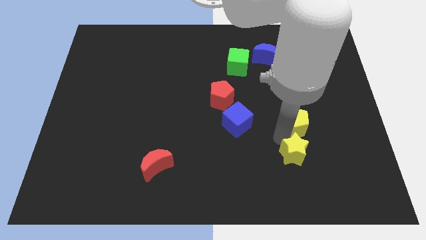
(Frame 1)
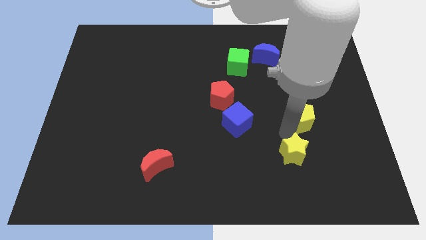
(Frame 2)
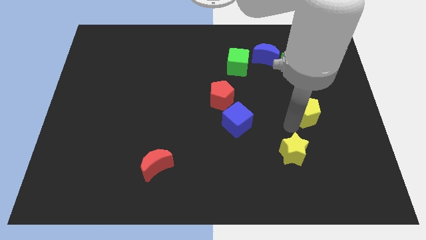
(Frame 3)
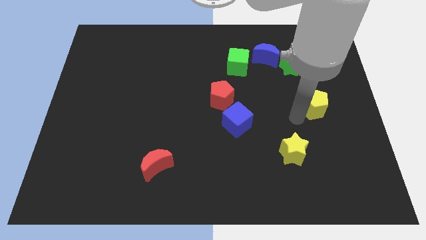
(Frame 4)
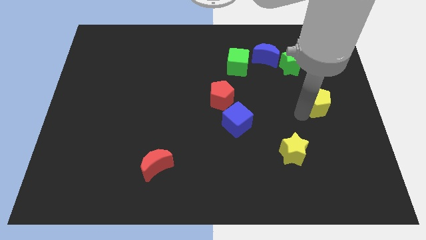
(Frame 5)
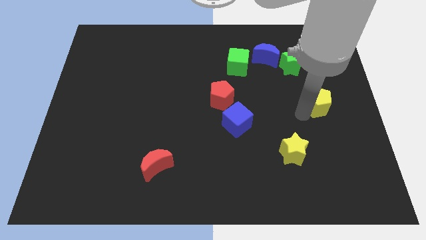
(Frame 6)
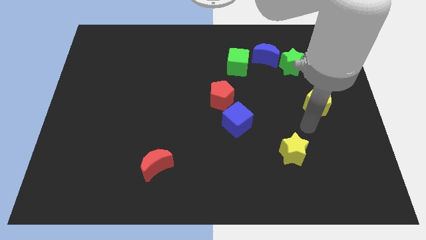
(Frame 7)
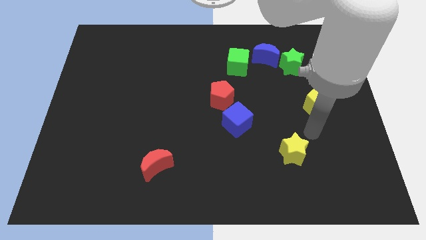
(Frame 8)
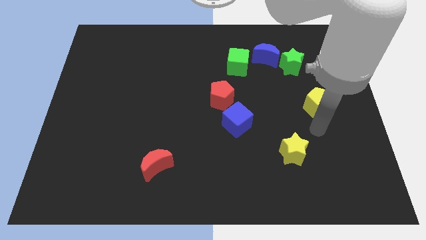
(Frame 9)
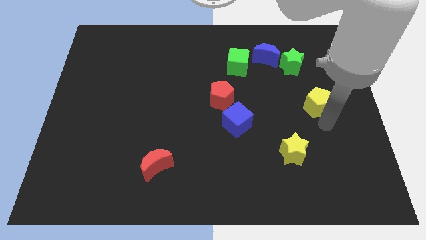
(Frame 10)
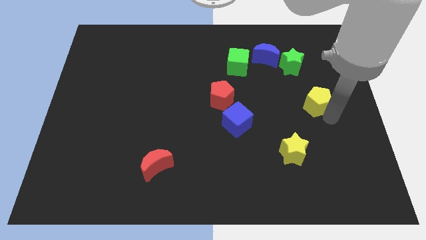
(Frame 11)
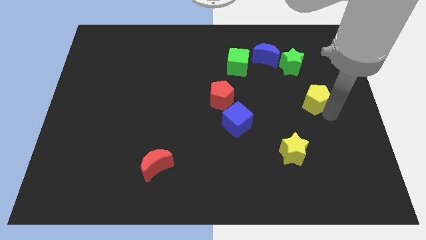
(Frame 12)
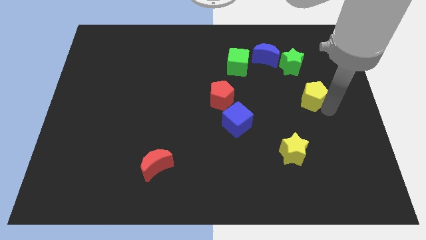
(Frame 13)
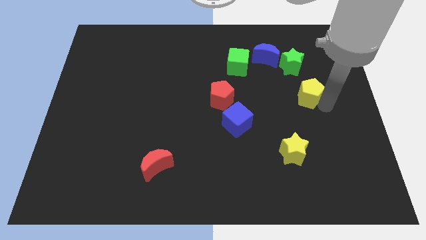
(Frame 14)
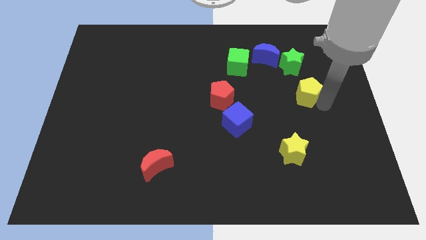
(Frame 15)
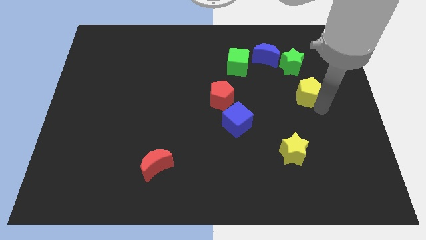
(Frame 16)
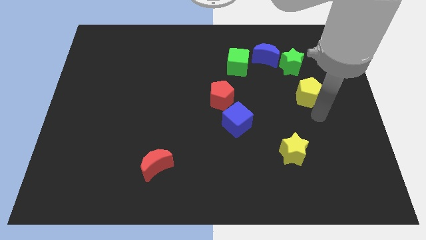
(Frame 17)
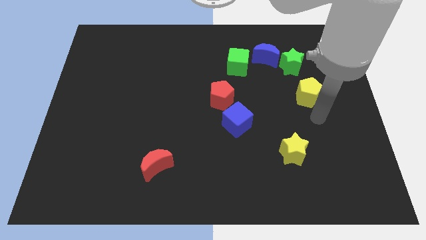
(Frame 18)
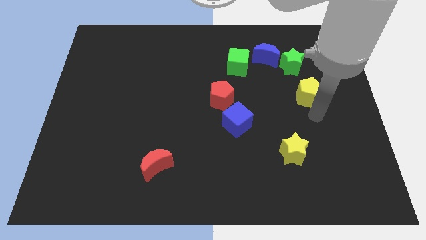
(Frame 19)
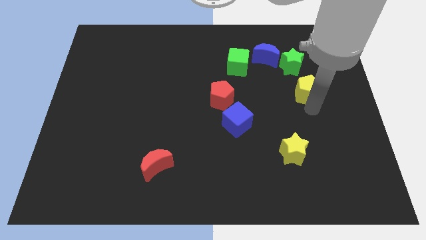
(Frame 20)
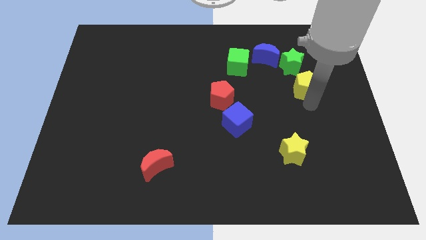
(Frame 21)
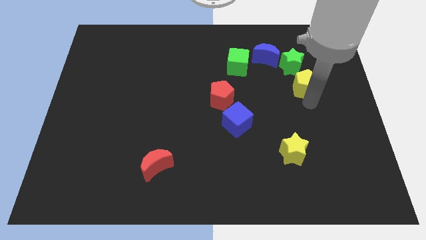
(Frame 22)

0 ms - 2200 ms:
move the yellow pentagon to the bottom of the greeb star

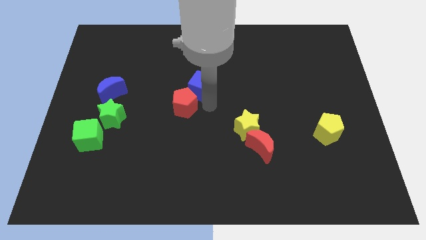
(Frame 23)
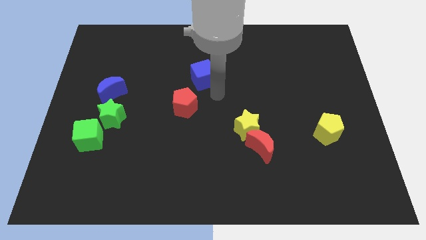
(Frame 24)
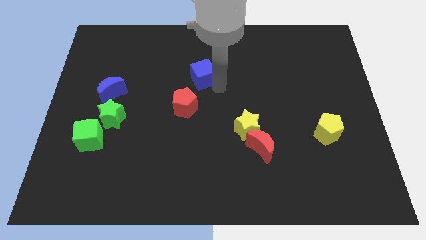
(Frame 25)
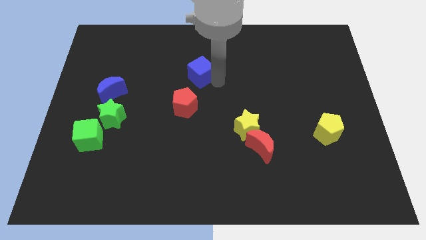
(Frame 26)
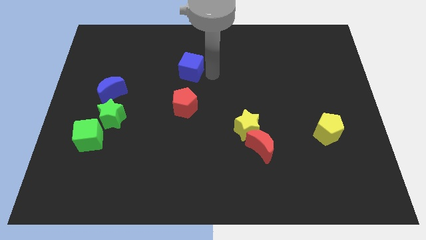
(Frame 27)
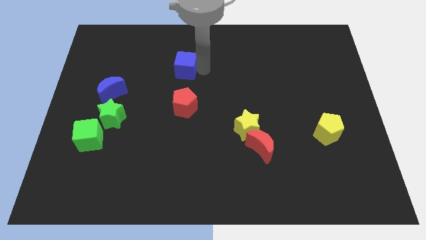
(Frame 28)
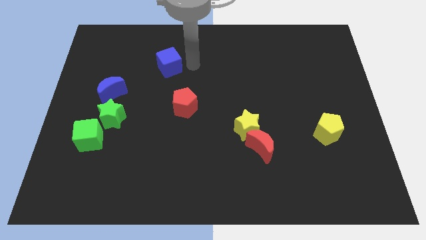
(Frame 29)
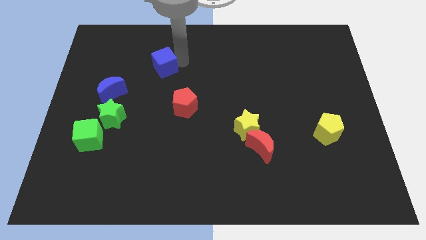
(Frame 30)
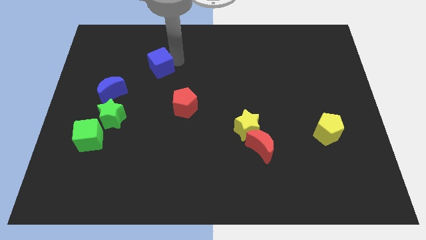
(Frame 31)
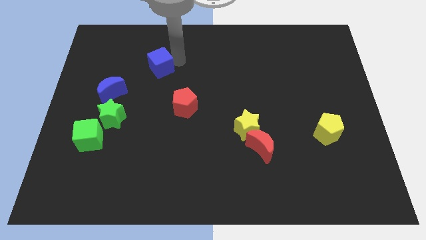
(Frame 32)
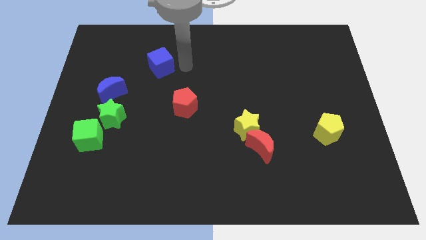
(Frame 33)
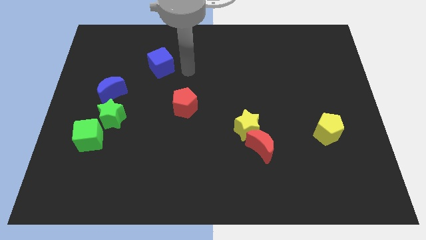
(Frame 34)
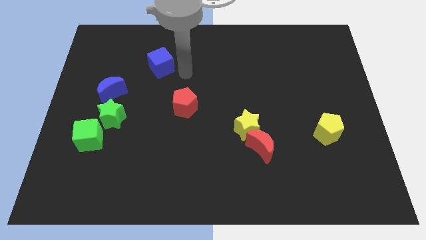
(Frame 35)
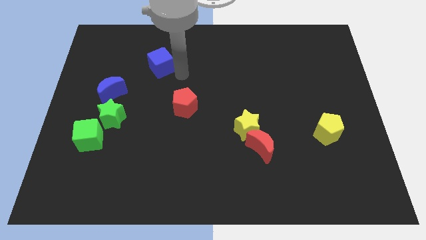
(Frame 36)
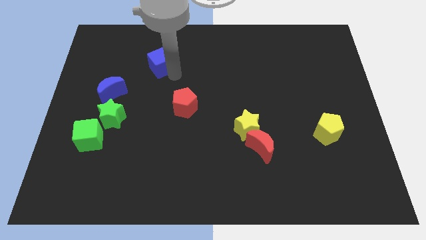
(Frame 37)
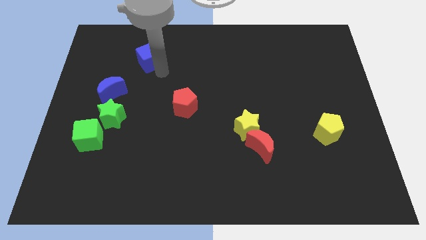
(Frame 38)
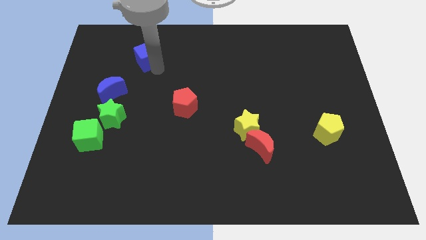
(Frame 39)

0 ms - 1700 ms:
move the blue cube away from the red pentagon

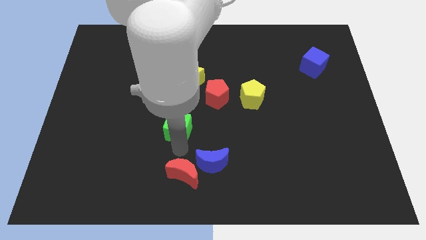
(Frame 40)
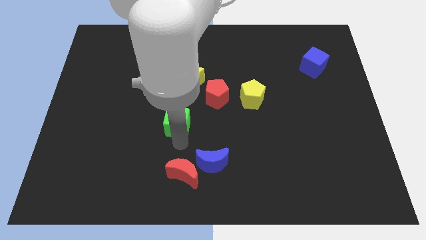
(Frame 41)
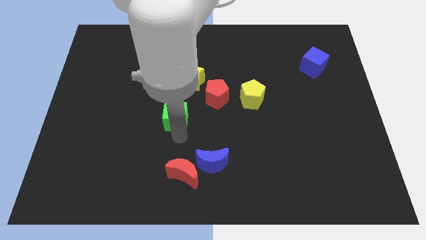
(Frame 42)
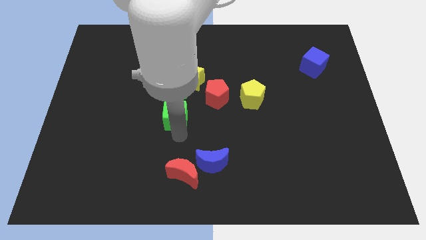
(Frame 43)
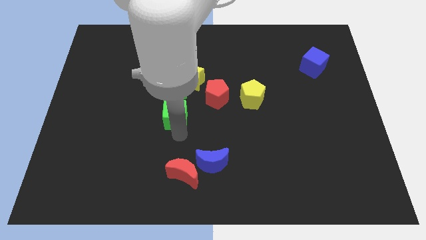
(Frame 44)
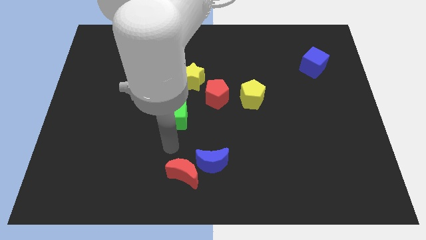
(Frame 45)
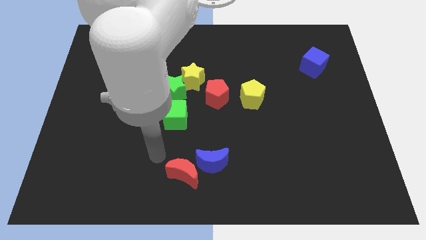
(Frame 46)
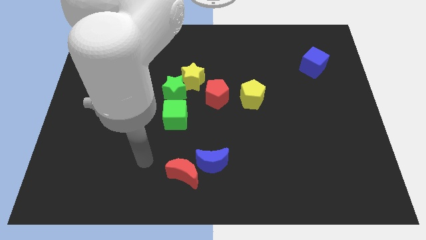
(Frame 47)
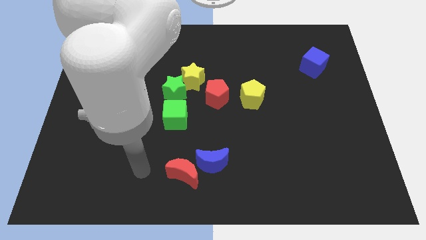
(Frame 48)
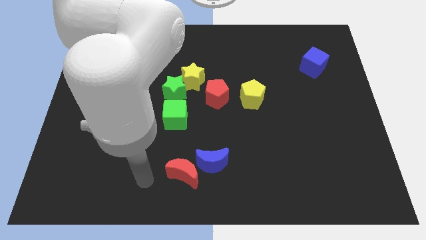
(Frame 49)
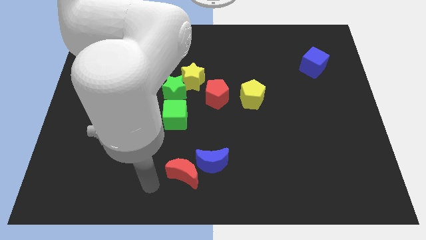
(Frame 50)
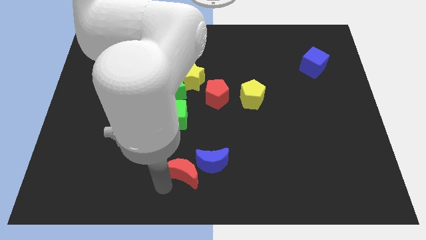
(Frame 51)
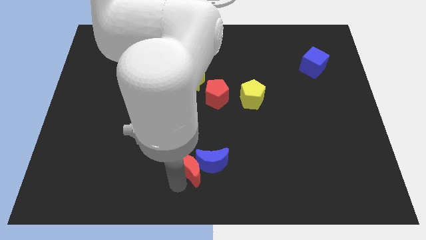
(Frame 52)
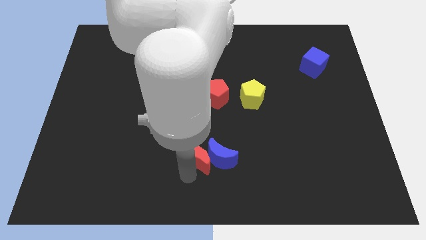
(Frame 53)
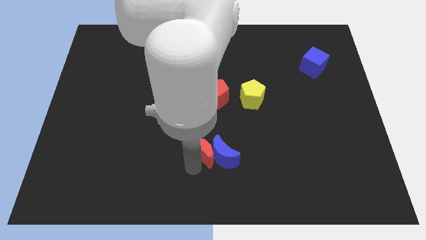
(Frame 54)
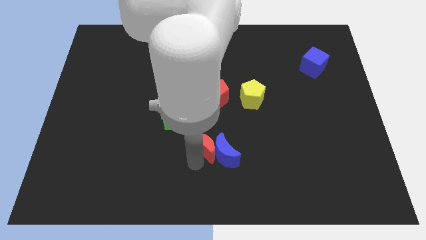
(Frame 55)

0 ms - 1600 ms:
push the red crescent into the blue crescent

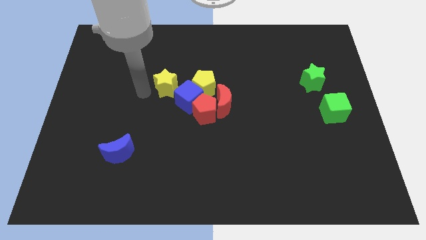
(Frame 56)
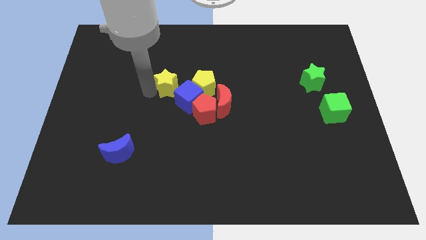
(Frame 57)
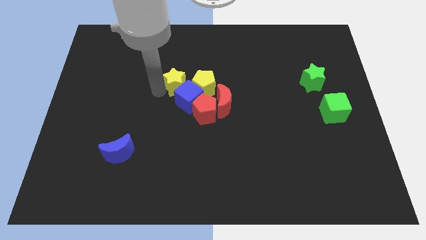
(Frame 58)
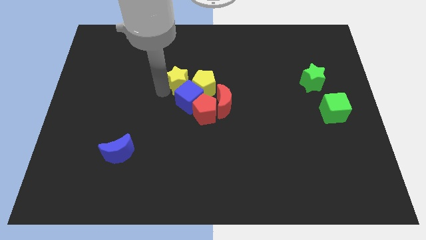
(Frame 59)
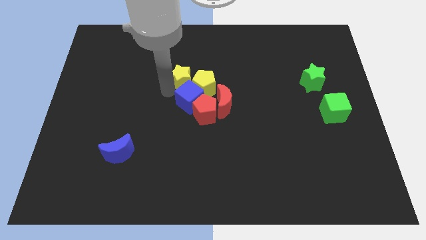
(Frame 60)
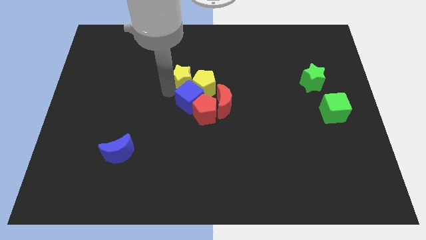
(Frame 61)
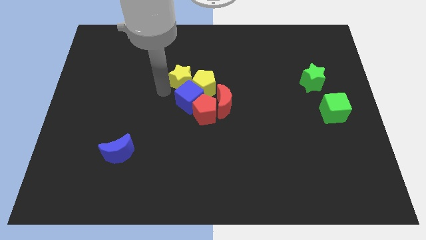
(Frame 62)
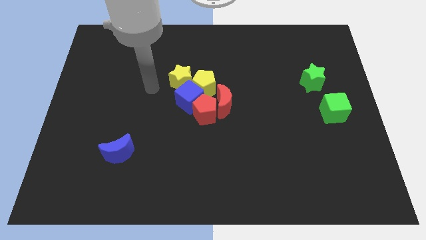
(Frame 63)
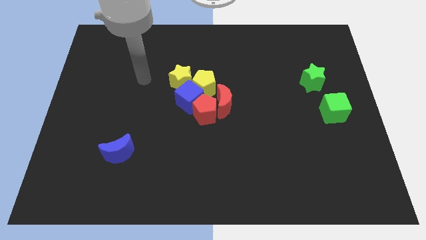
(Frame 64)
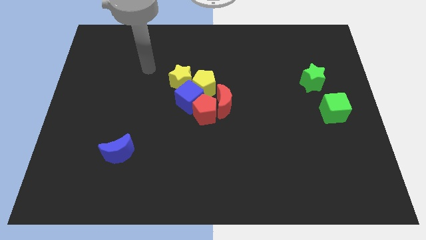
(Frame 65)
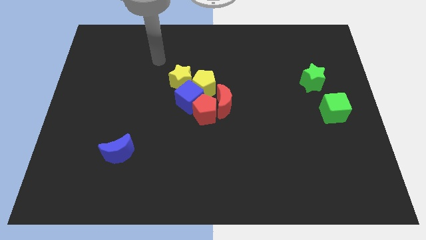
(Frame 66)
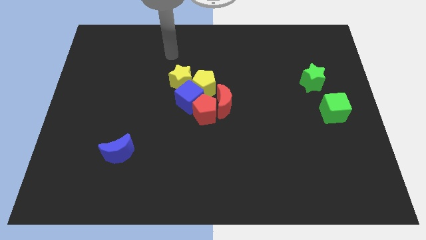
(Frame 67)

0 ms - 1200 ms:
push the yellow star to the left of the yellow pentagon

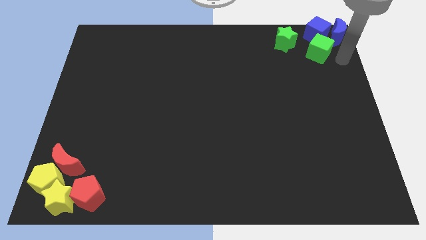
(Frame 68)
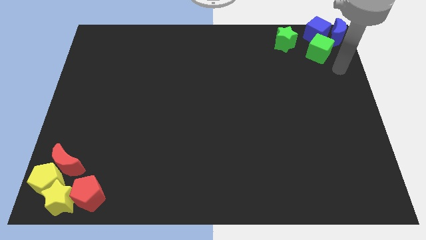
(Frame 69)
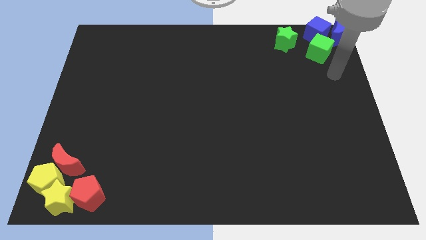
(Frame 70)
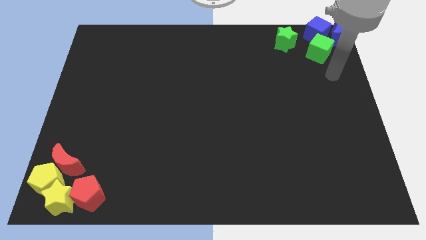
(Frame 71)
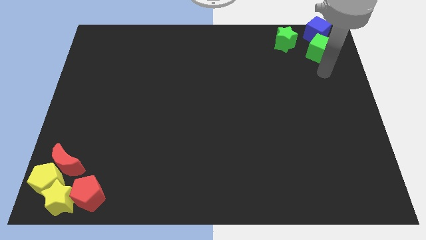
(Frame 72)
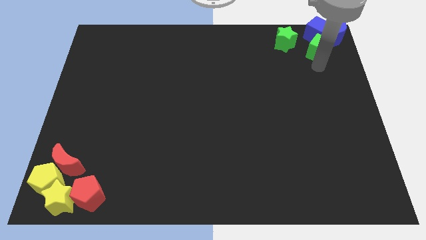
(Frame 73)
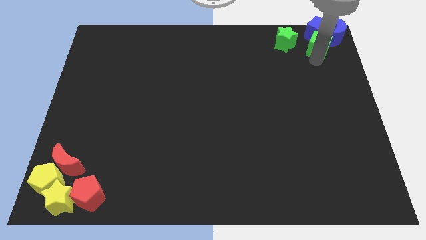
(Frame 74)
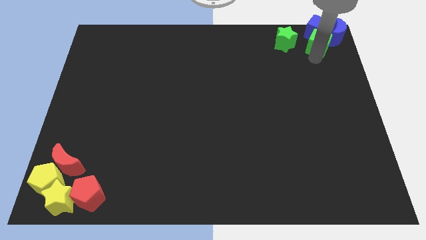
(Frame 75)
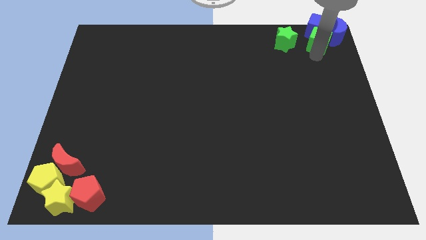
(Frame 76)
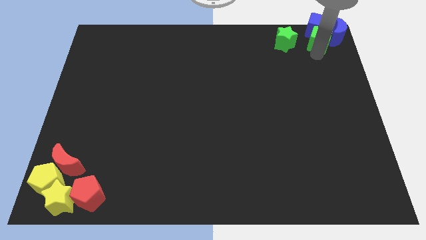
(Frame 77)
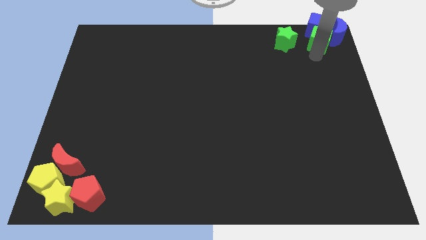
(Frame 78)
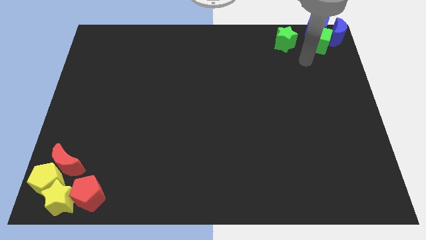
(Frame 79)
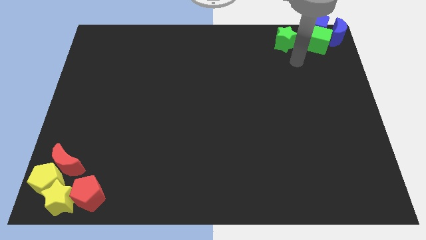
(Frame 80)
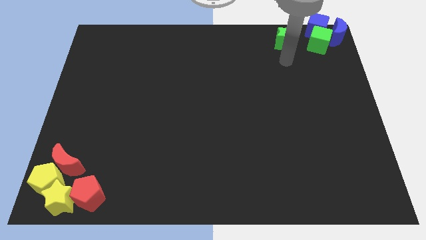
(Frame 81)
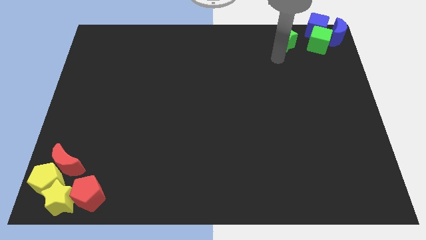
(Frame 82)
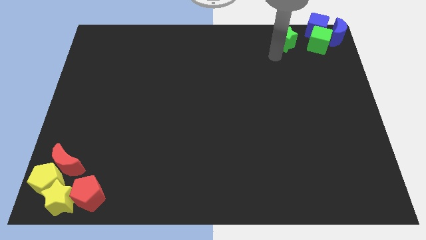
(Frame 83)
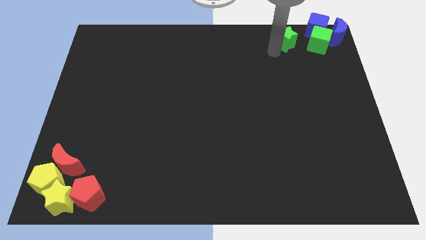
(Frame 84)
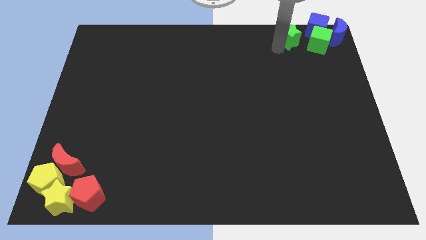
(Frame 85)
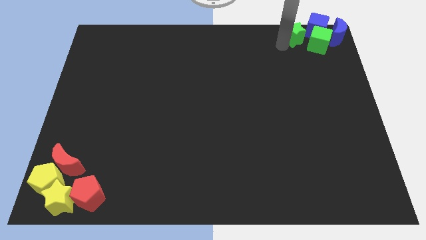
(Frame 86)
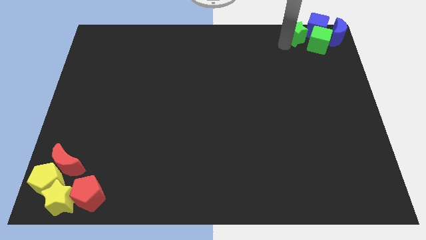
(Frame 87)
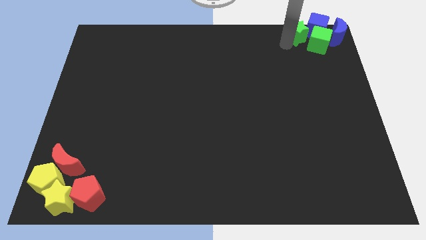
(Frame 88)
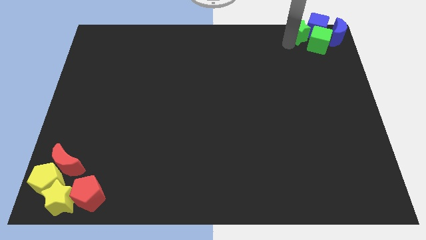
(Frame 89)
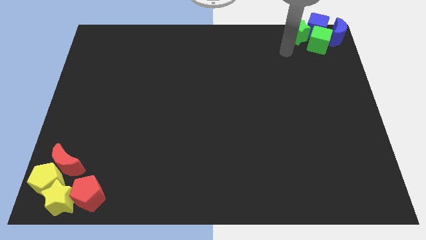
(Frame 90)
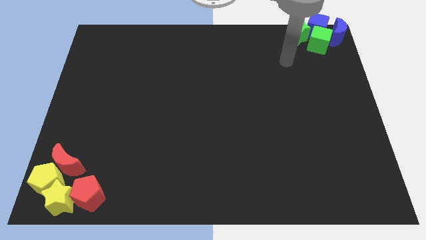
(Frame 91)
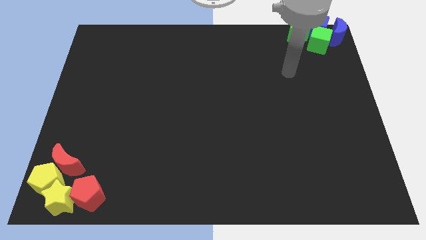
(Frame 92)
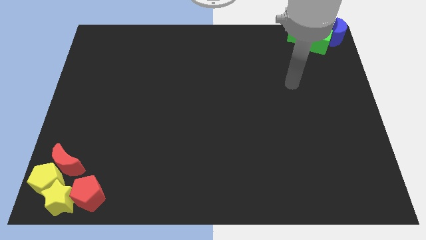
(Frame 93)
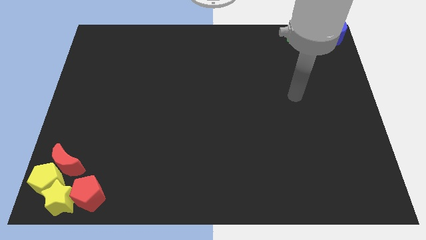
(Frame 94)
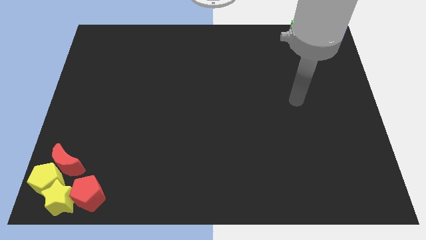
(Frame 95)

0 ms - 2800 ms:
push the green star to the left side of the blue cube
